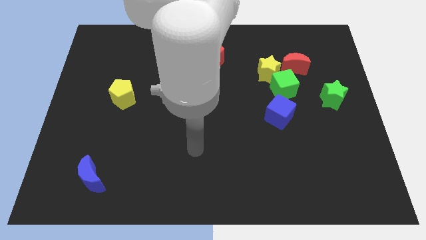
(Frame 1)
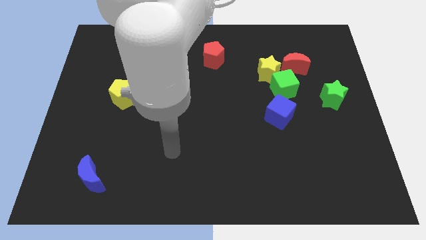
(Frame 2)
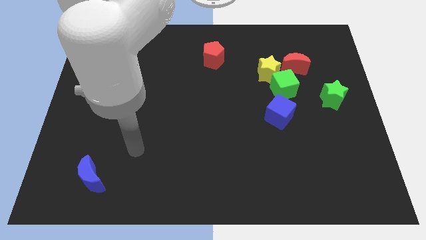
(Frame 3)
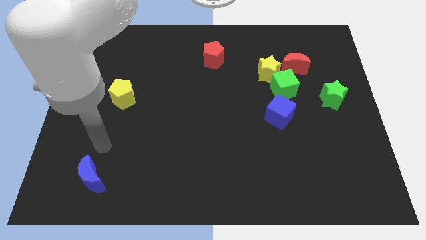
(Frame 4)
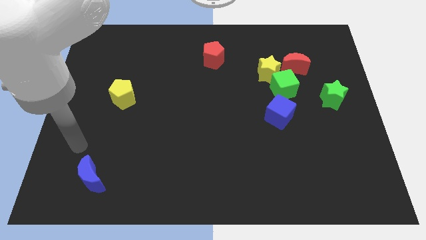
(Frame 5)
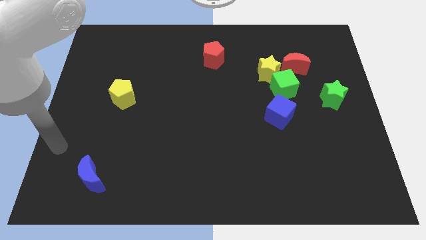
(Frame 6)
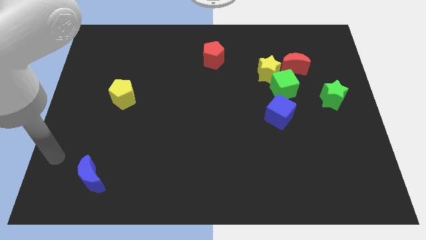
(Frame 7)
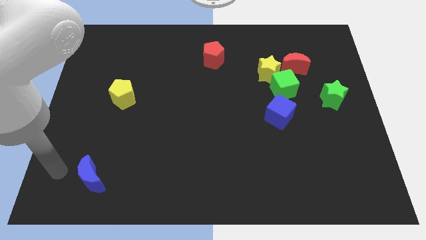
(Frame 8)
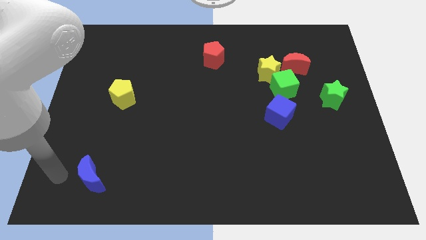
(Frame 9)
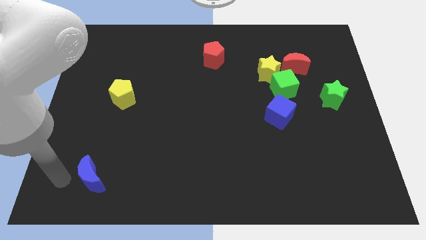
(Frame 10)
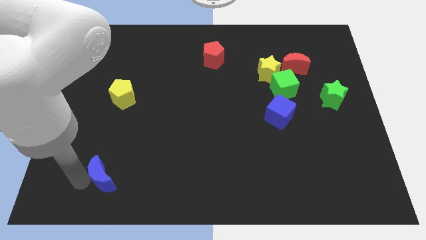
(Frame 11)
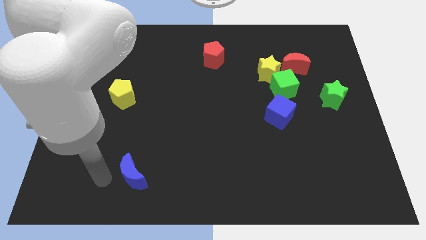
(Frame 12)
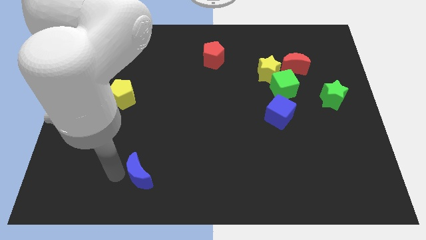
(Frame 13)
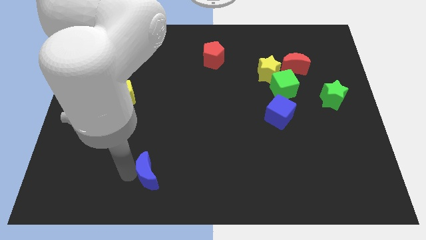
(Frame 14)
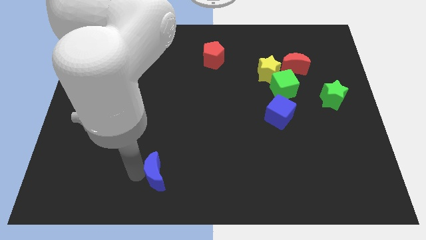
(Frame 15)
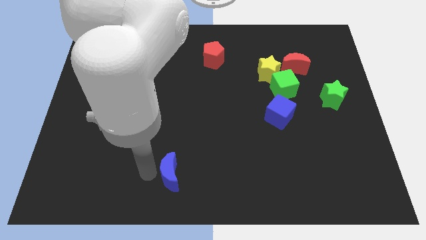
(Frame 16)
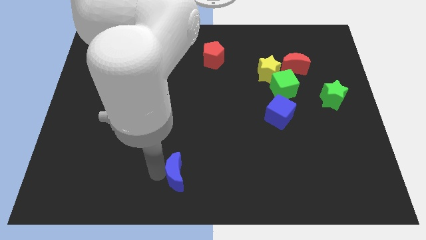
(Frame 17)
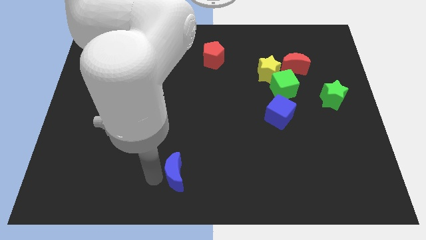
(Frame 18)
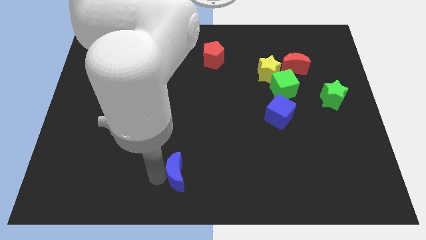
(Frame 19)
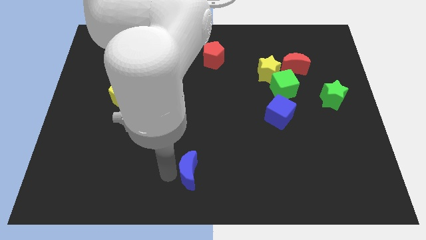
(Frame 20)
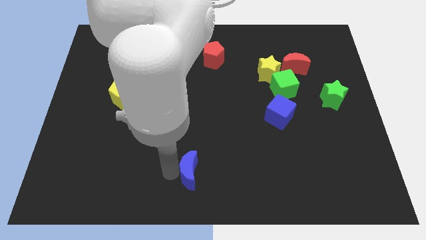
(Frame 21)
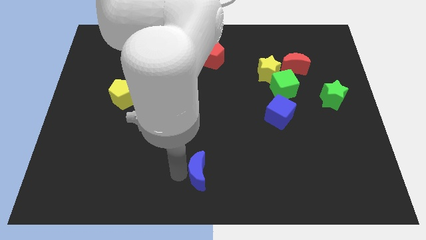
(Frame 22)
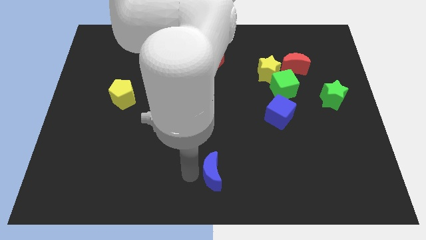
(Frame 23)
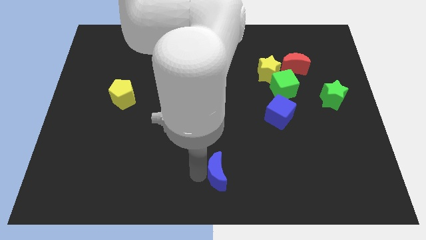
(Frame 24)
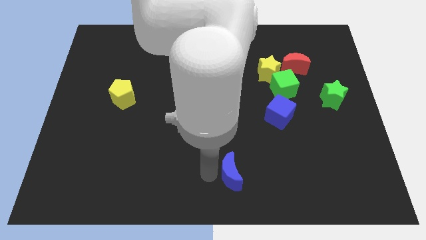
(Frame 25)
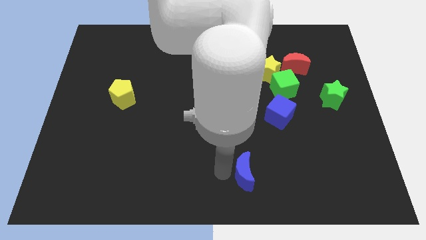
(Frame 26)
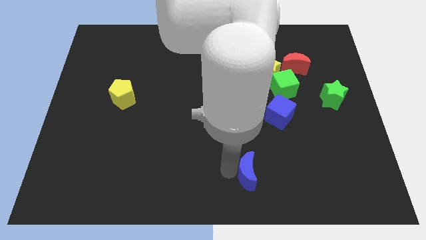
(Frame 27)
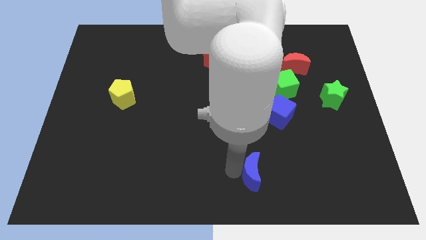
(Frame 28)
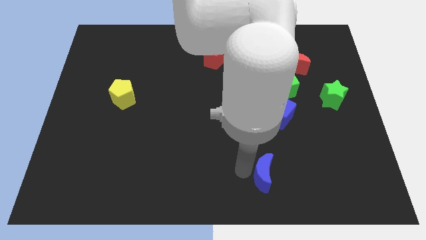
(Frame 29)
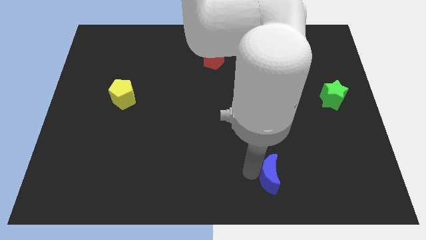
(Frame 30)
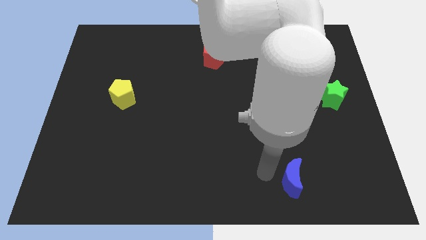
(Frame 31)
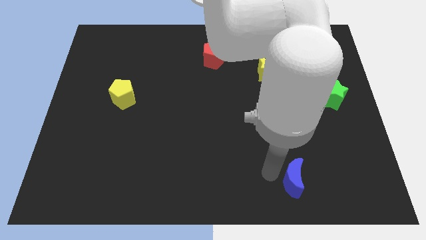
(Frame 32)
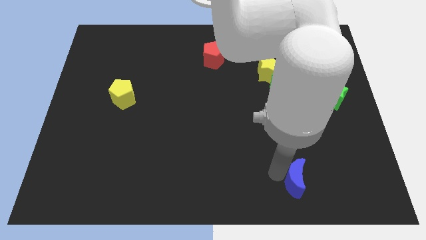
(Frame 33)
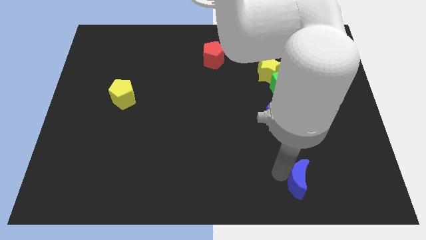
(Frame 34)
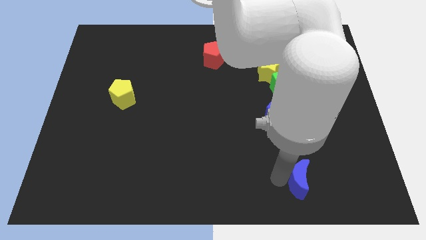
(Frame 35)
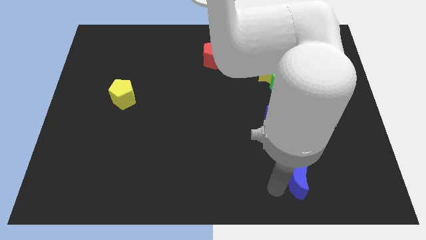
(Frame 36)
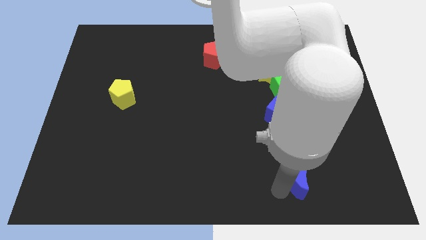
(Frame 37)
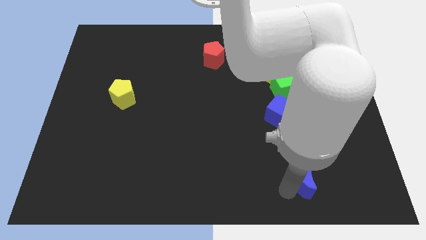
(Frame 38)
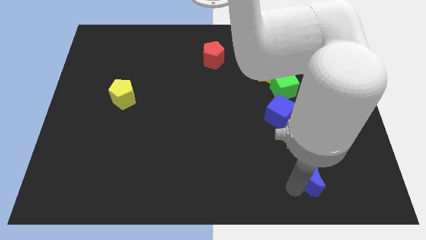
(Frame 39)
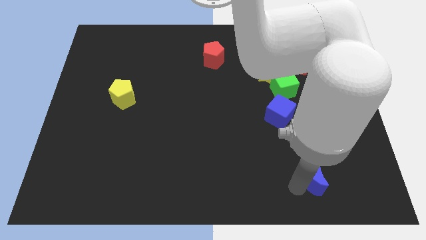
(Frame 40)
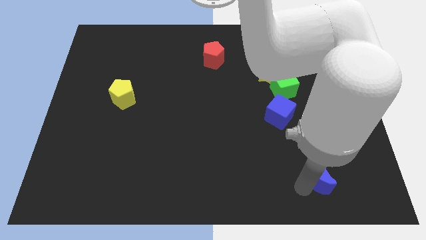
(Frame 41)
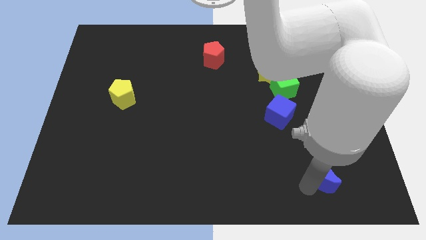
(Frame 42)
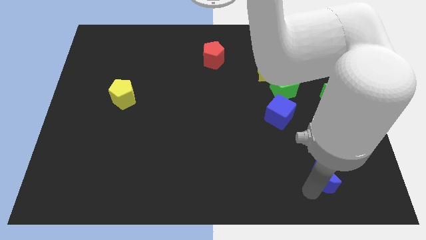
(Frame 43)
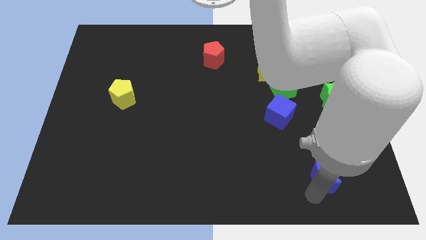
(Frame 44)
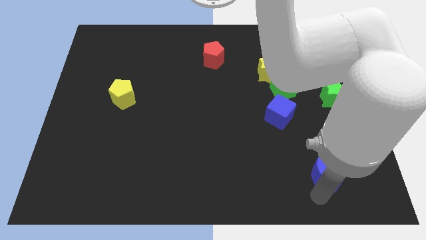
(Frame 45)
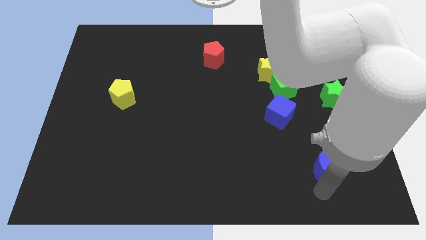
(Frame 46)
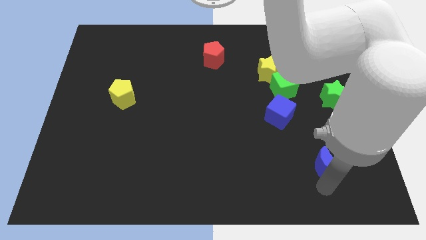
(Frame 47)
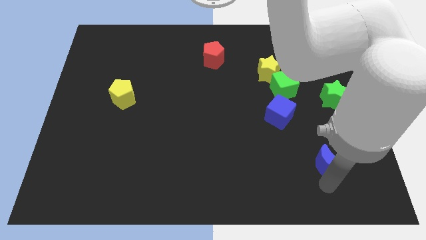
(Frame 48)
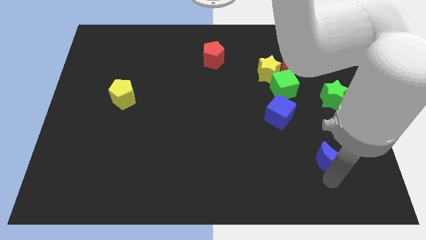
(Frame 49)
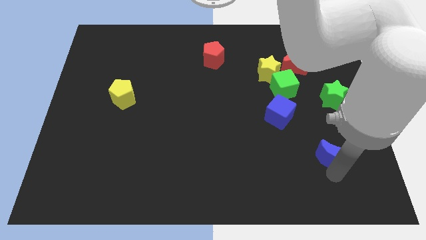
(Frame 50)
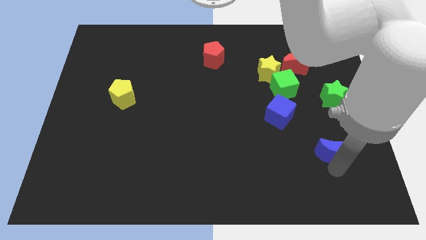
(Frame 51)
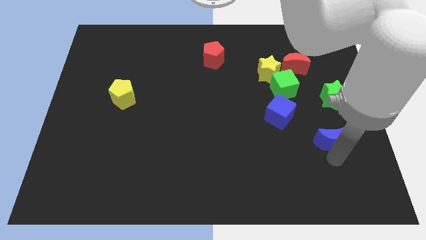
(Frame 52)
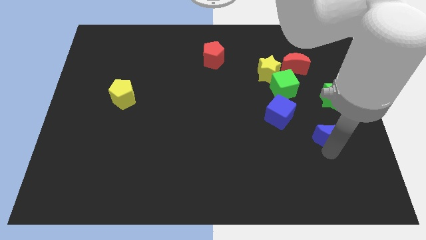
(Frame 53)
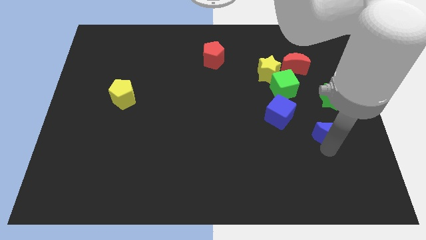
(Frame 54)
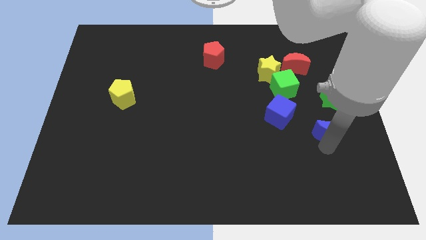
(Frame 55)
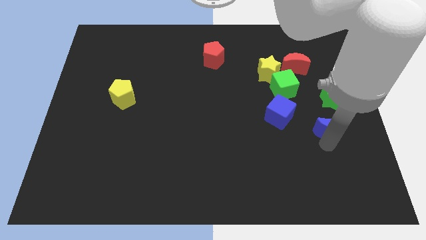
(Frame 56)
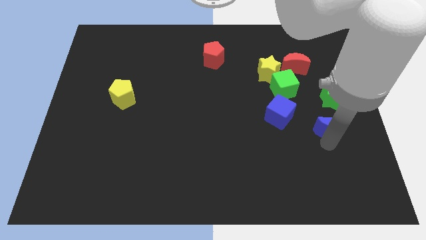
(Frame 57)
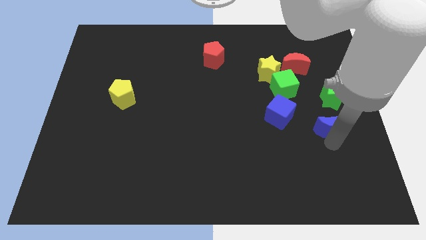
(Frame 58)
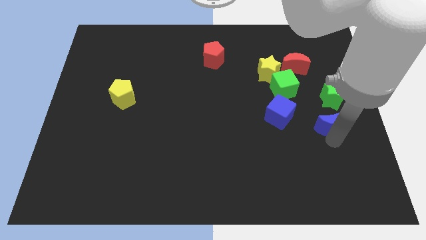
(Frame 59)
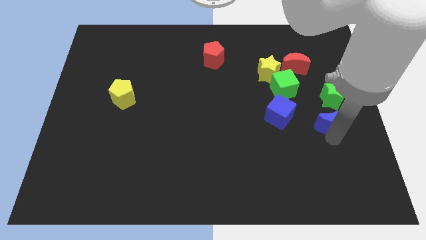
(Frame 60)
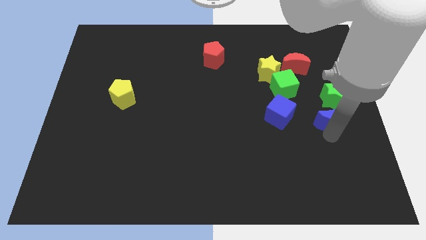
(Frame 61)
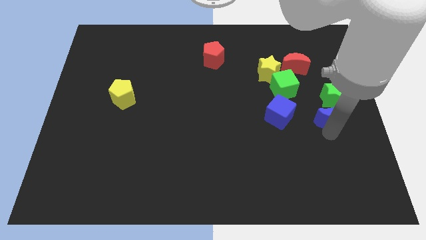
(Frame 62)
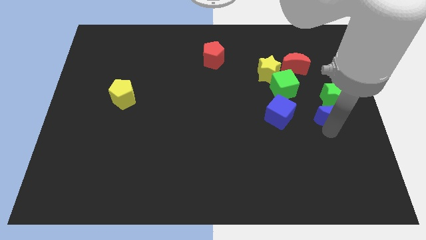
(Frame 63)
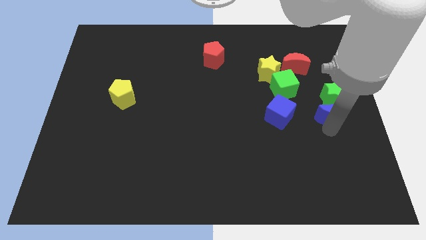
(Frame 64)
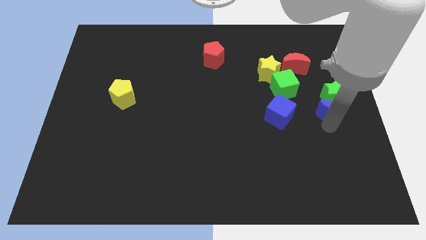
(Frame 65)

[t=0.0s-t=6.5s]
move the blue moon to the green star

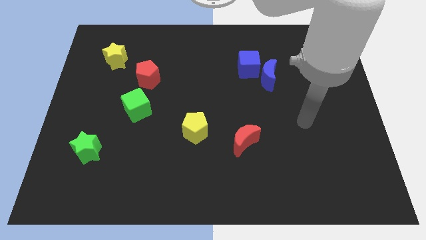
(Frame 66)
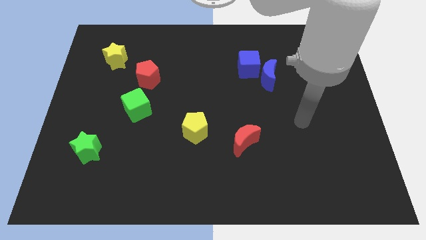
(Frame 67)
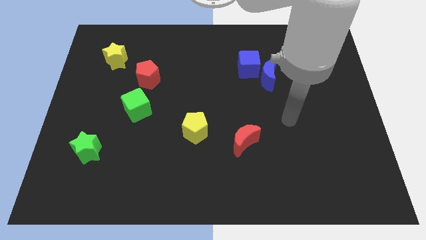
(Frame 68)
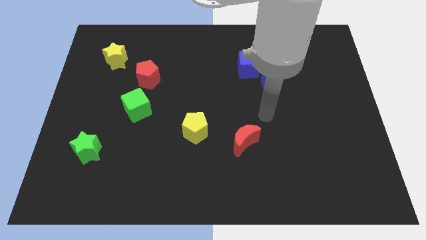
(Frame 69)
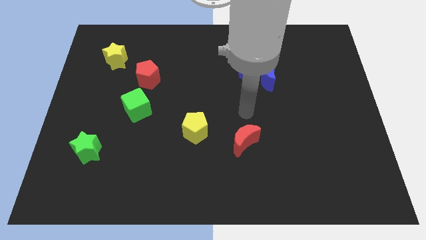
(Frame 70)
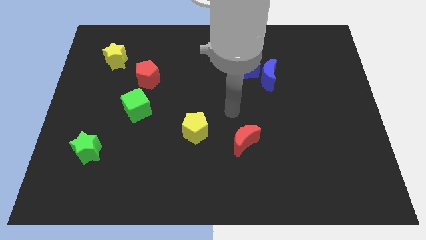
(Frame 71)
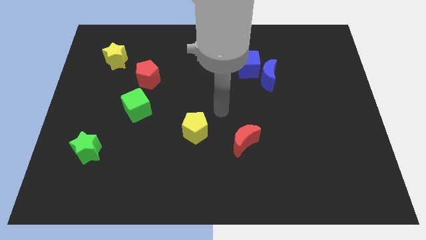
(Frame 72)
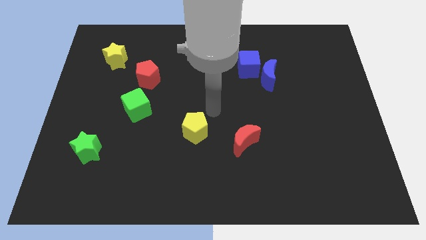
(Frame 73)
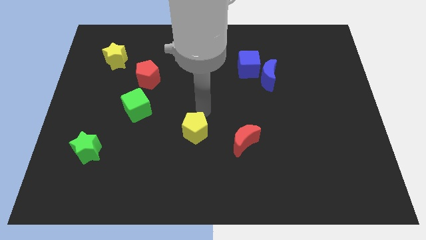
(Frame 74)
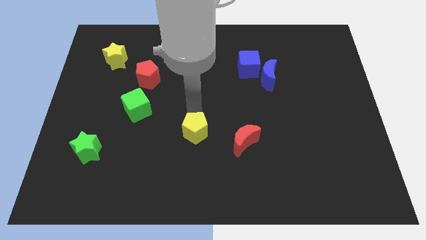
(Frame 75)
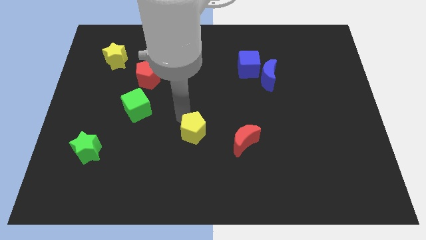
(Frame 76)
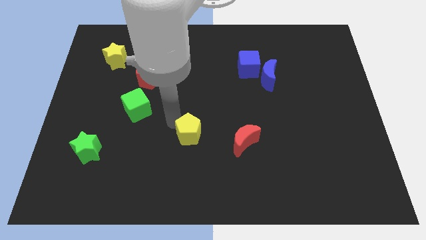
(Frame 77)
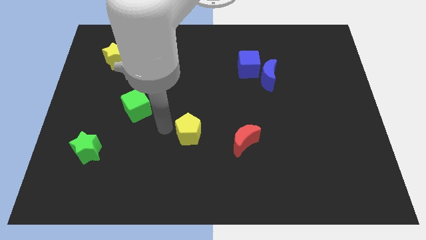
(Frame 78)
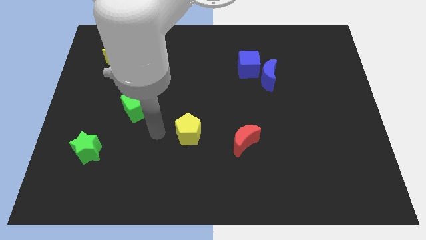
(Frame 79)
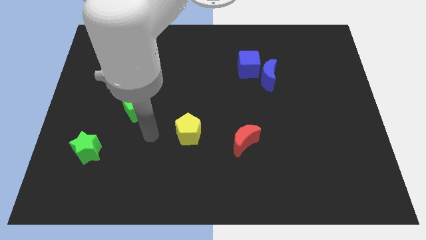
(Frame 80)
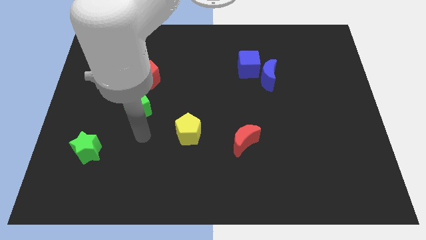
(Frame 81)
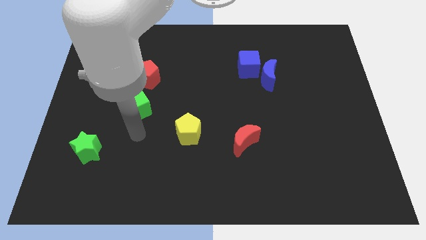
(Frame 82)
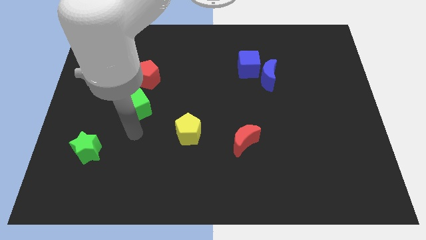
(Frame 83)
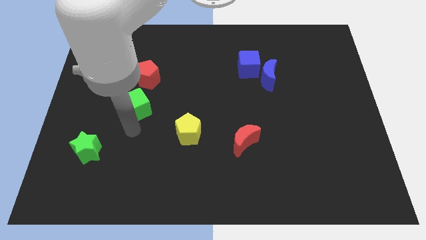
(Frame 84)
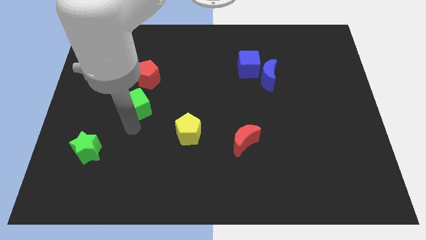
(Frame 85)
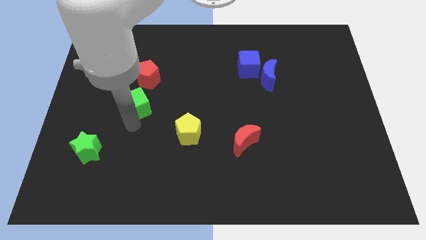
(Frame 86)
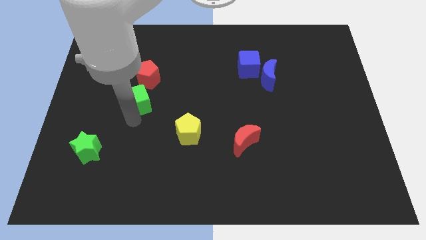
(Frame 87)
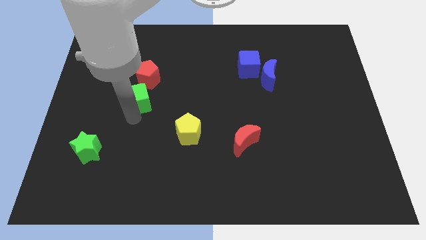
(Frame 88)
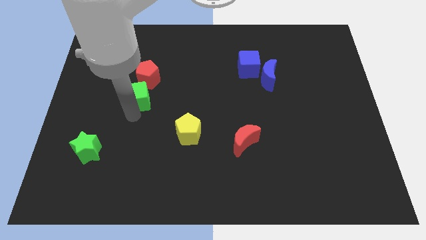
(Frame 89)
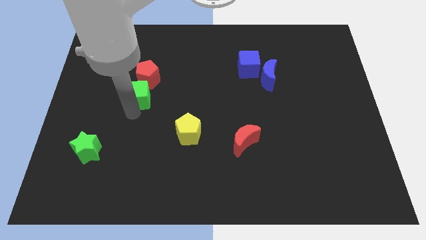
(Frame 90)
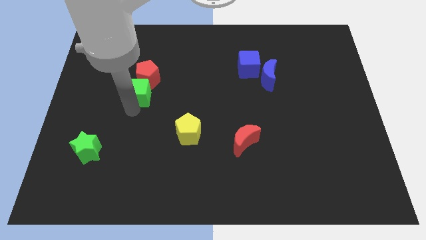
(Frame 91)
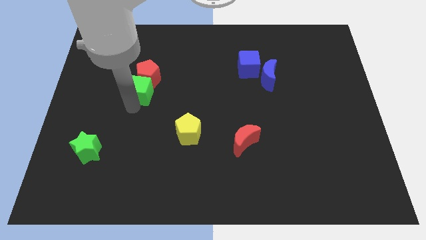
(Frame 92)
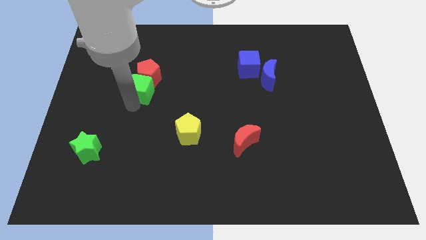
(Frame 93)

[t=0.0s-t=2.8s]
put the green cube close to the red pentagon
